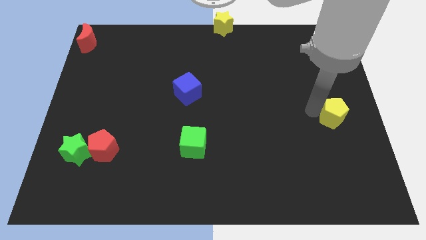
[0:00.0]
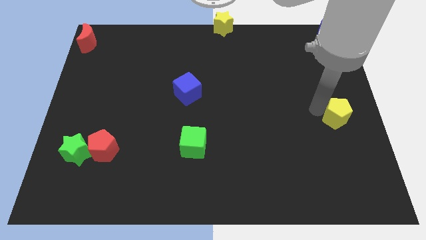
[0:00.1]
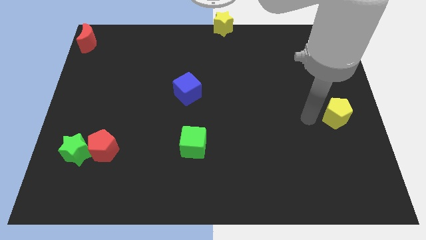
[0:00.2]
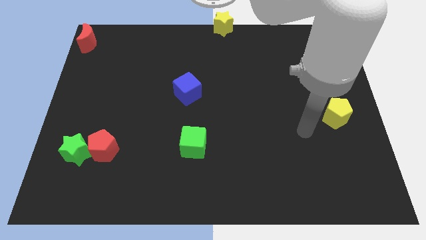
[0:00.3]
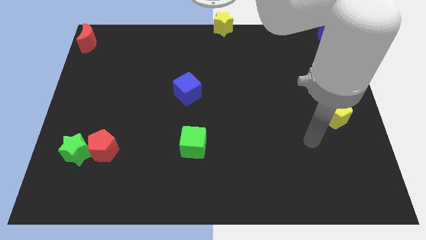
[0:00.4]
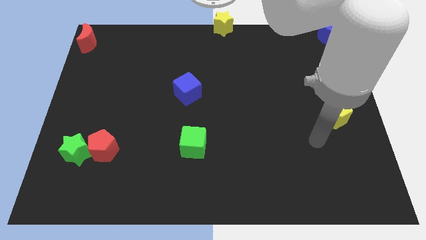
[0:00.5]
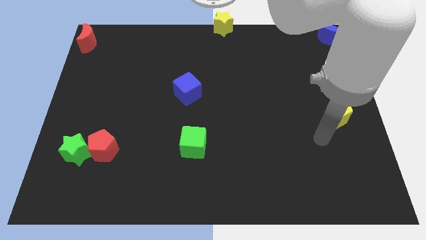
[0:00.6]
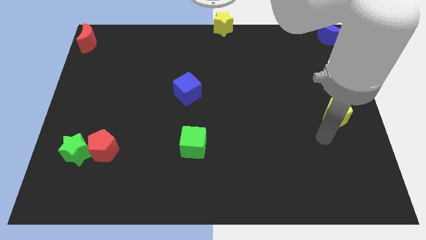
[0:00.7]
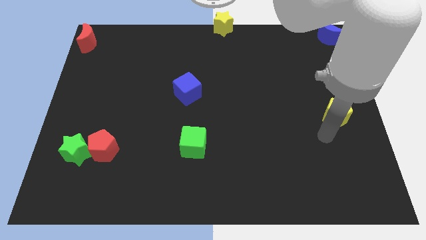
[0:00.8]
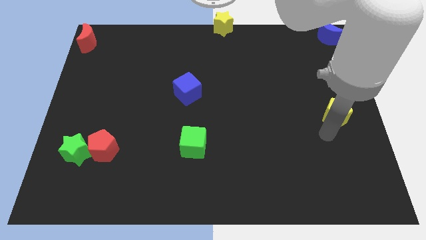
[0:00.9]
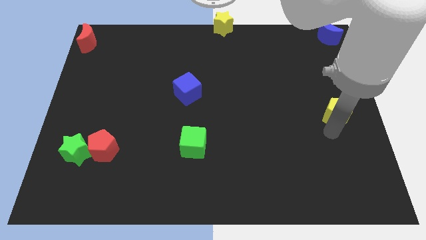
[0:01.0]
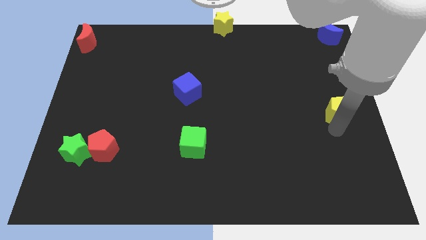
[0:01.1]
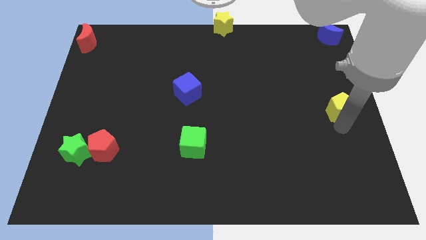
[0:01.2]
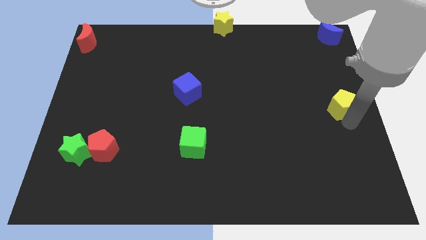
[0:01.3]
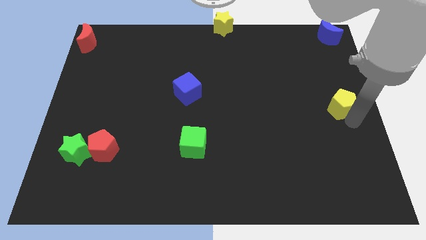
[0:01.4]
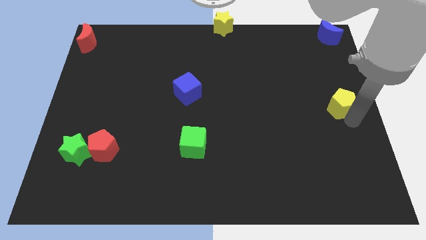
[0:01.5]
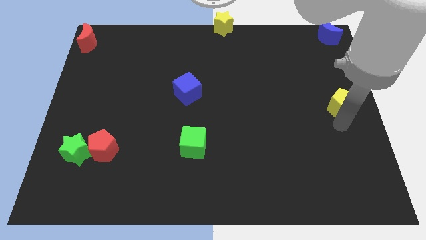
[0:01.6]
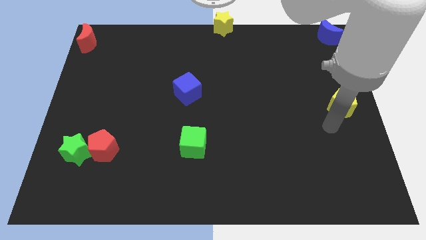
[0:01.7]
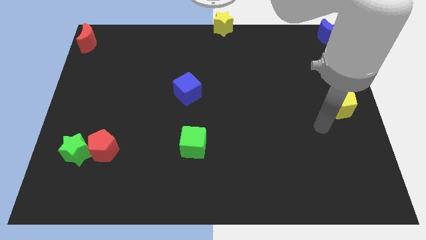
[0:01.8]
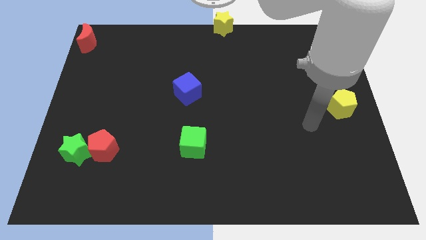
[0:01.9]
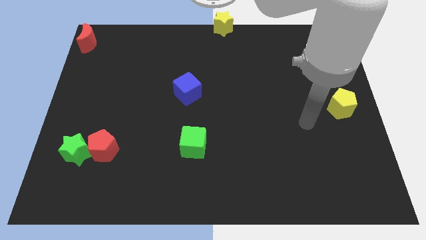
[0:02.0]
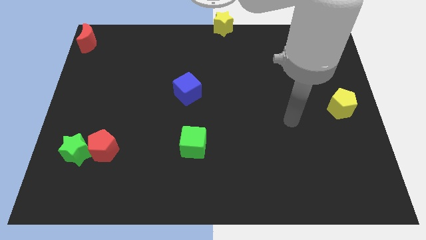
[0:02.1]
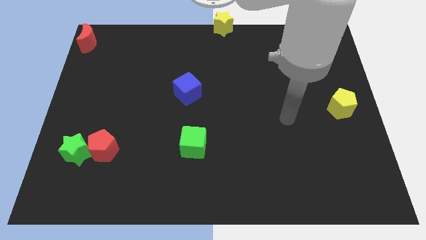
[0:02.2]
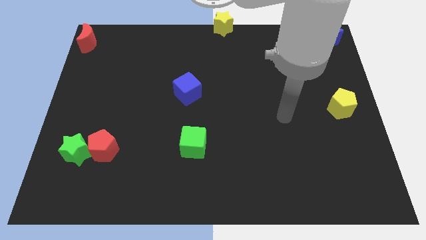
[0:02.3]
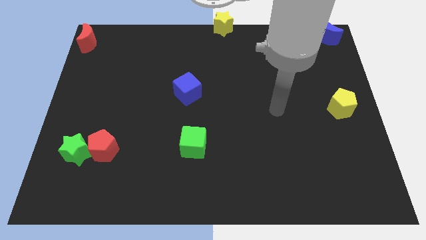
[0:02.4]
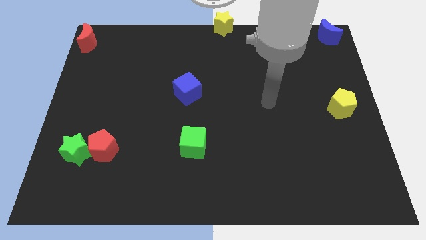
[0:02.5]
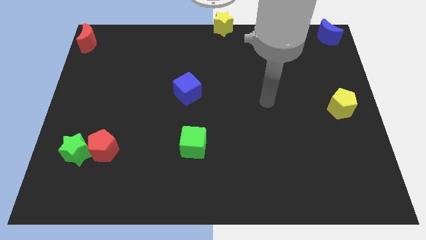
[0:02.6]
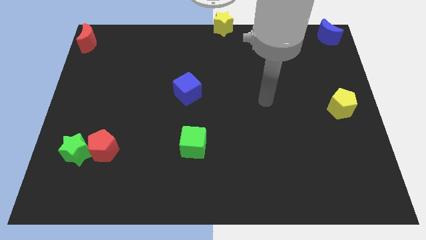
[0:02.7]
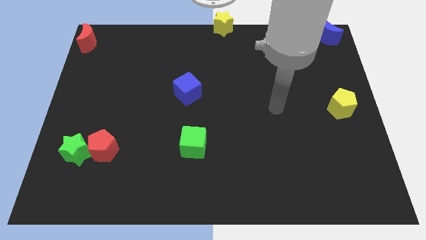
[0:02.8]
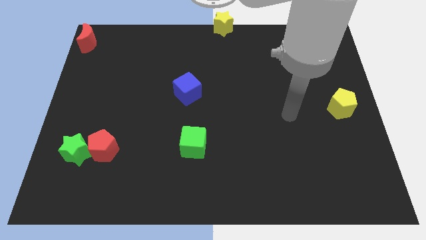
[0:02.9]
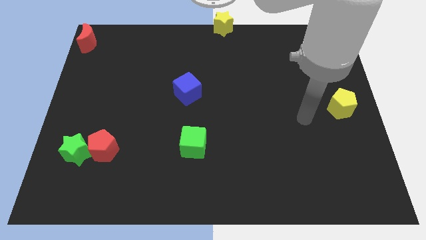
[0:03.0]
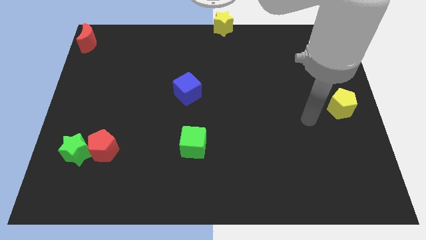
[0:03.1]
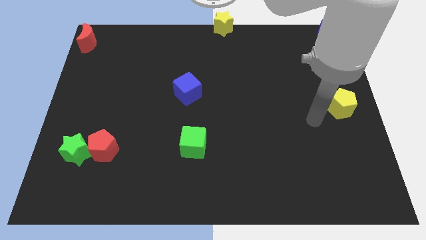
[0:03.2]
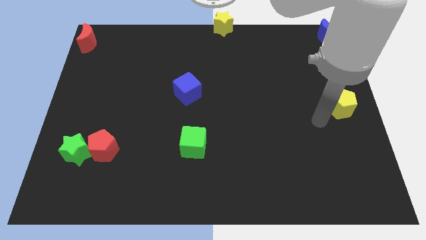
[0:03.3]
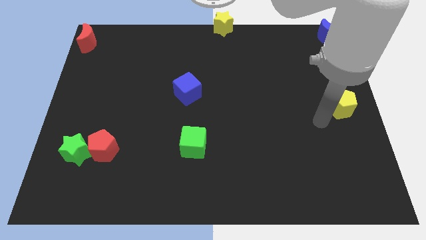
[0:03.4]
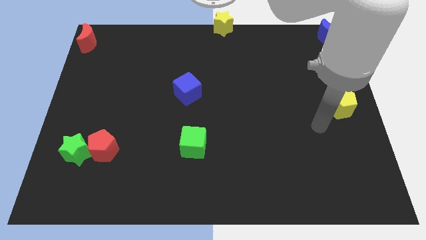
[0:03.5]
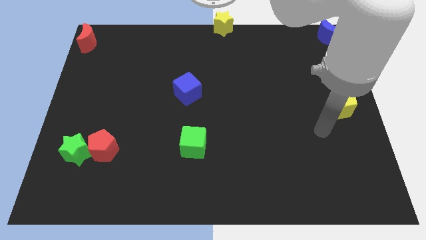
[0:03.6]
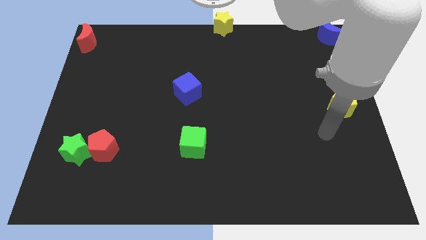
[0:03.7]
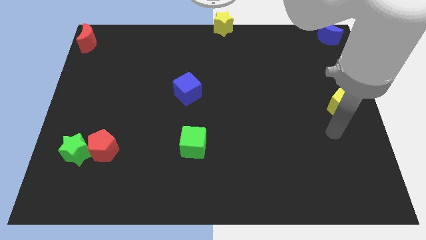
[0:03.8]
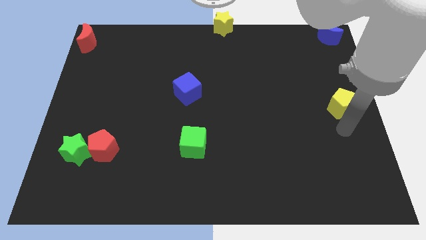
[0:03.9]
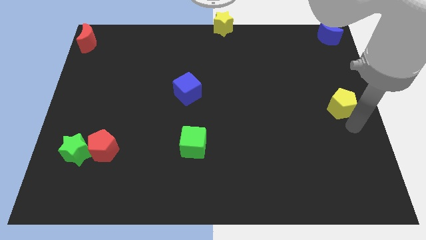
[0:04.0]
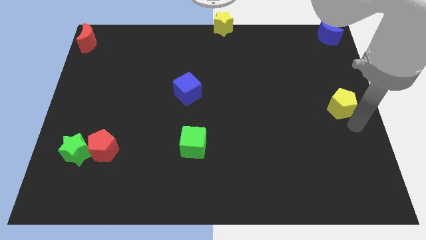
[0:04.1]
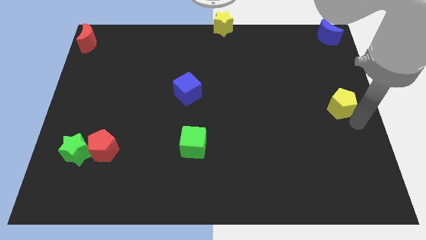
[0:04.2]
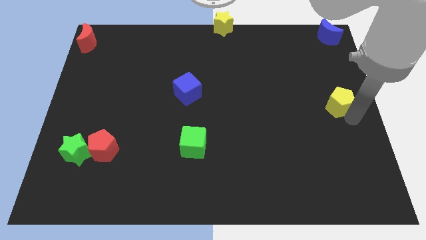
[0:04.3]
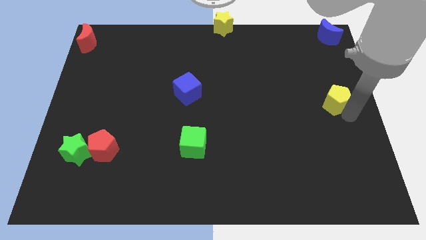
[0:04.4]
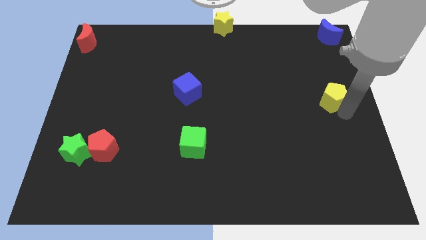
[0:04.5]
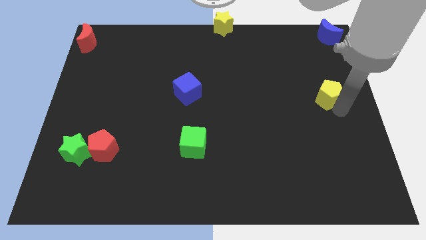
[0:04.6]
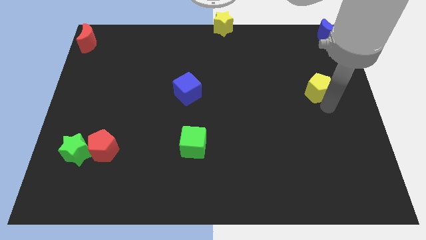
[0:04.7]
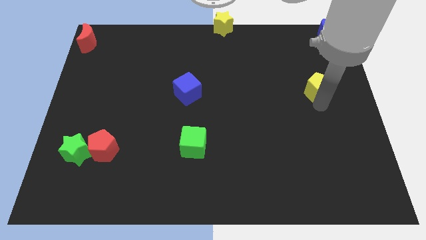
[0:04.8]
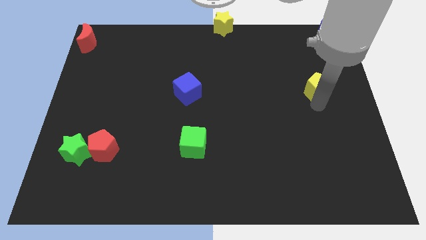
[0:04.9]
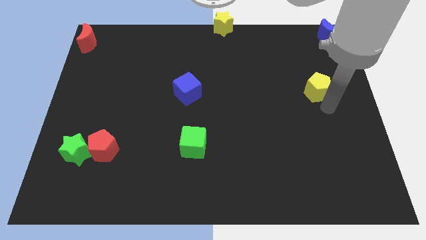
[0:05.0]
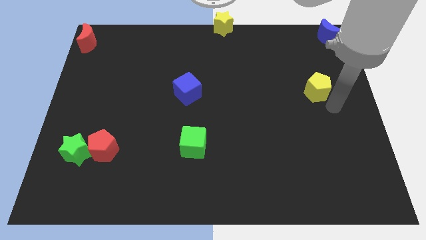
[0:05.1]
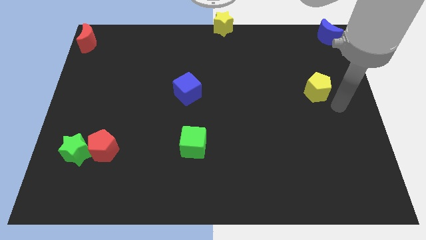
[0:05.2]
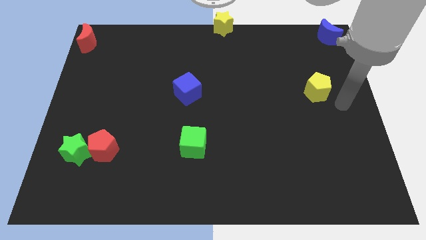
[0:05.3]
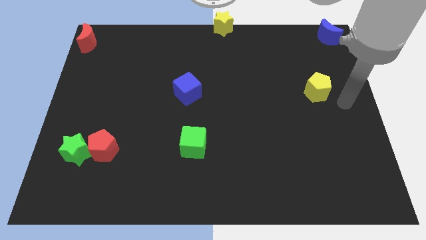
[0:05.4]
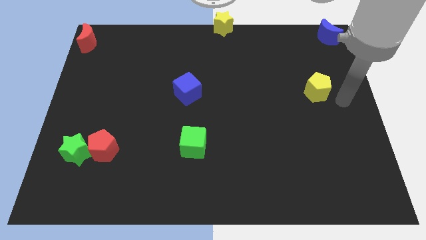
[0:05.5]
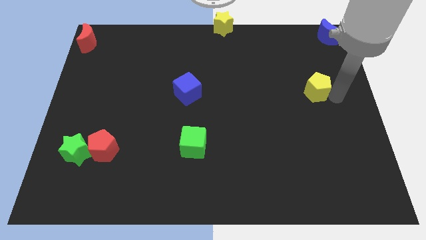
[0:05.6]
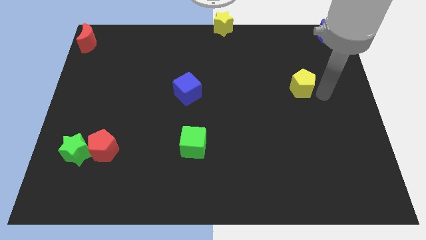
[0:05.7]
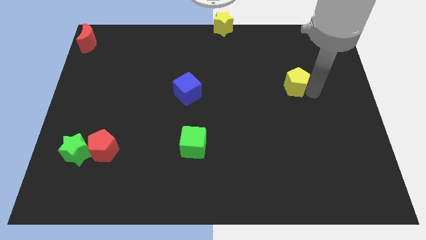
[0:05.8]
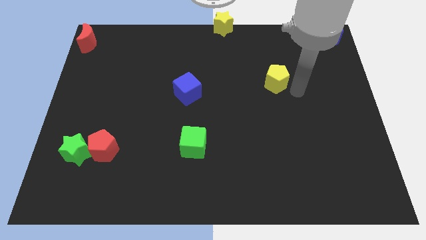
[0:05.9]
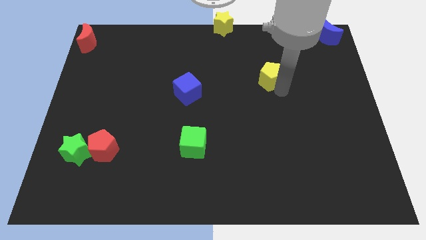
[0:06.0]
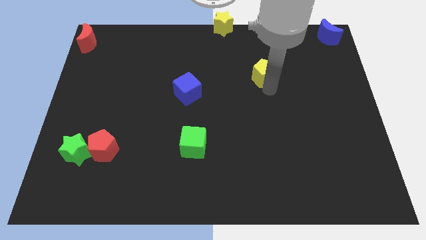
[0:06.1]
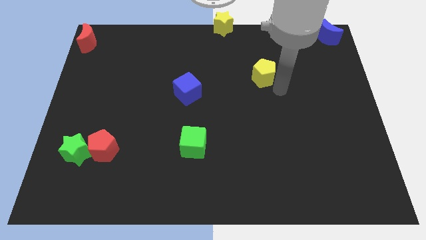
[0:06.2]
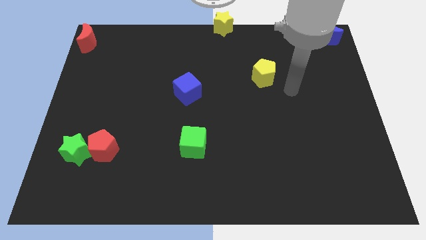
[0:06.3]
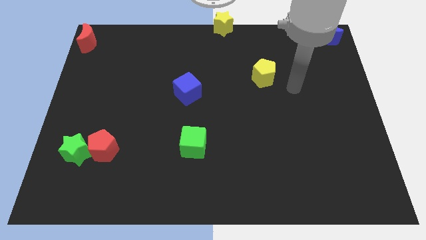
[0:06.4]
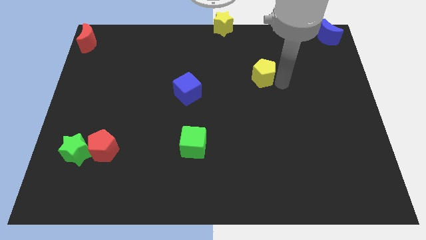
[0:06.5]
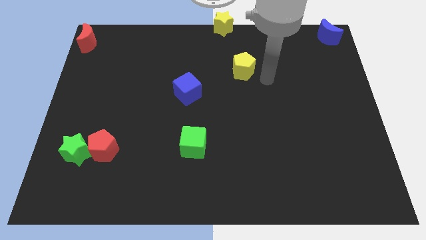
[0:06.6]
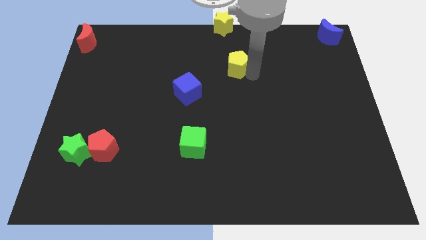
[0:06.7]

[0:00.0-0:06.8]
place the yellow pentagon in between the blue moon and blue cube

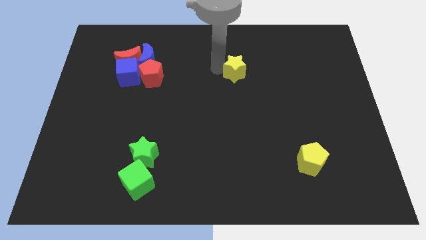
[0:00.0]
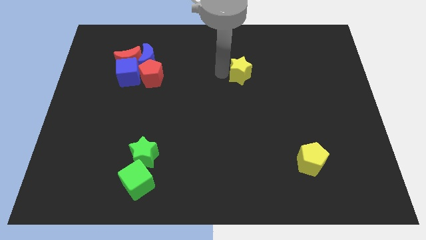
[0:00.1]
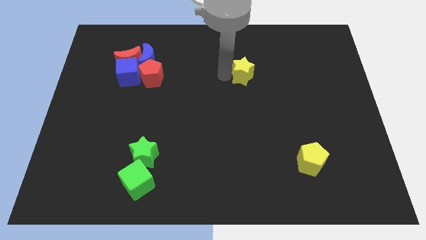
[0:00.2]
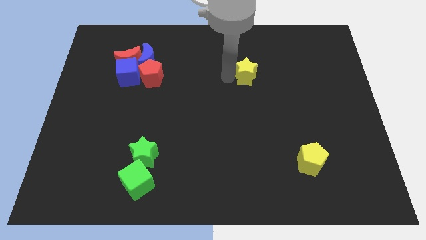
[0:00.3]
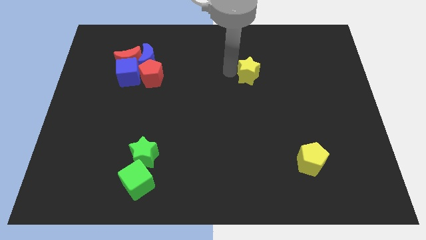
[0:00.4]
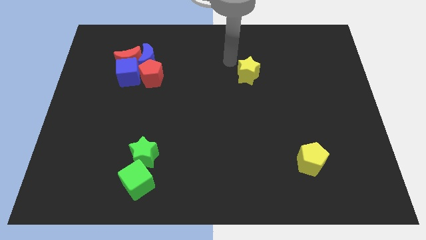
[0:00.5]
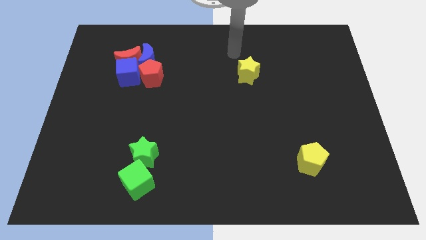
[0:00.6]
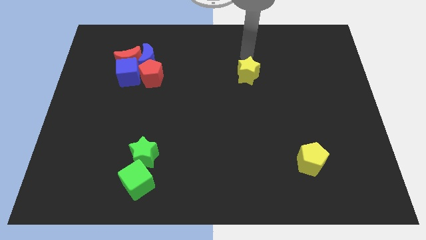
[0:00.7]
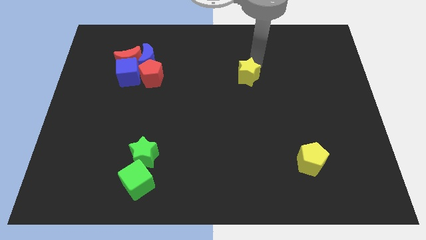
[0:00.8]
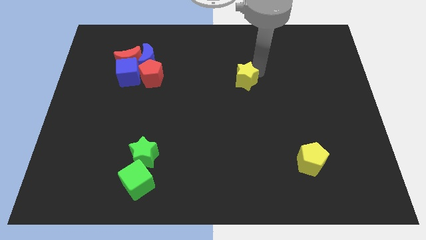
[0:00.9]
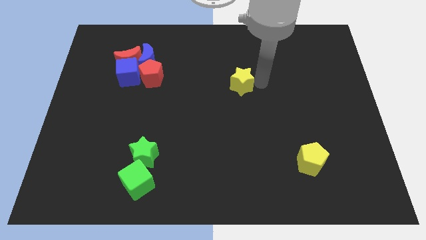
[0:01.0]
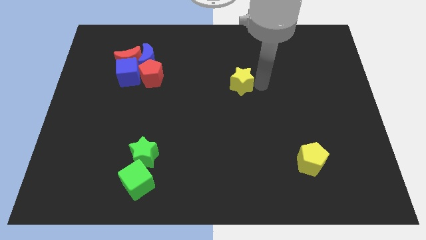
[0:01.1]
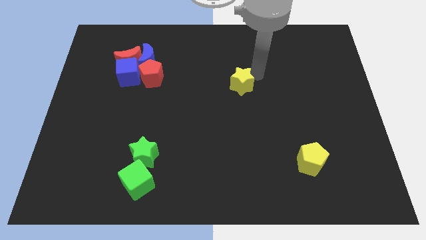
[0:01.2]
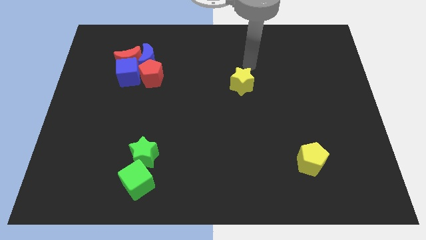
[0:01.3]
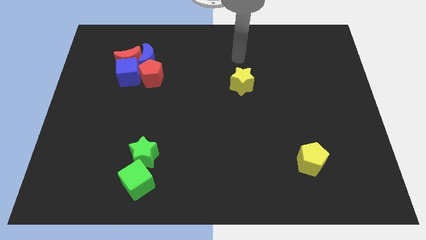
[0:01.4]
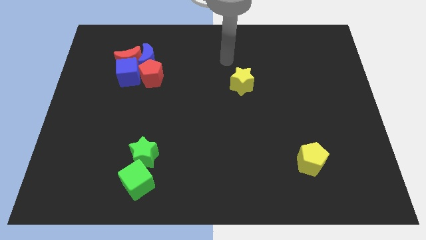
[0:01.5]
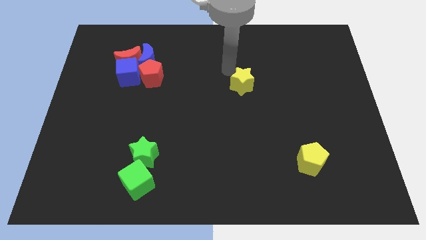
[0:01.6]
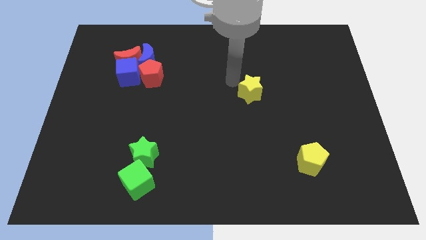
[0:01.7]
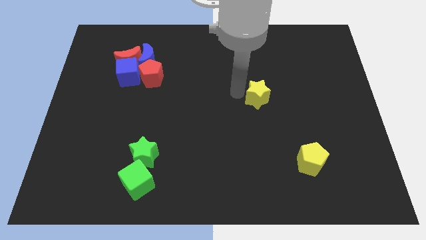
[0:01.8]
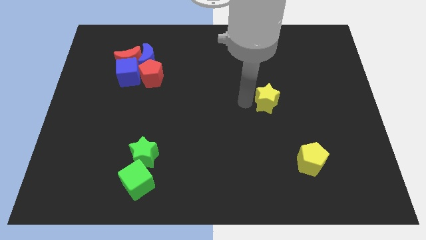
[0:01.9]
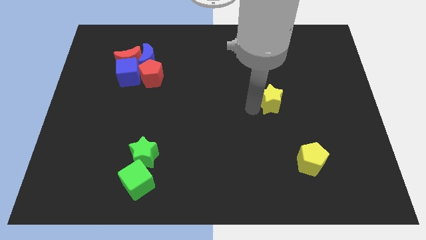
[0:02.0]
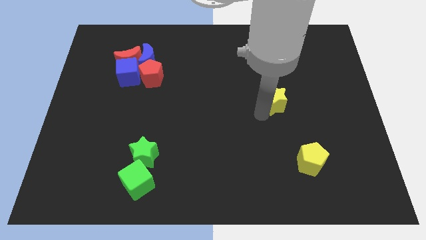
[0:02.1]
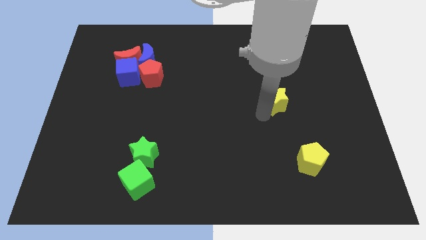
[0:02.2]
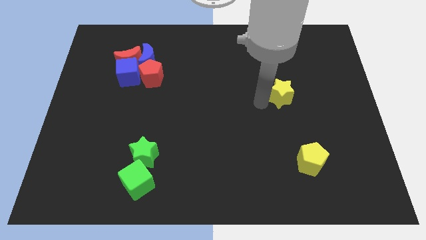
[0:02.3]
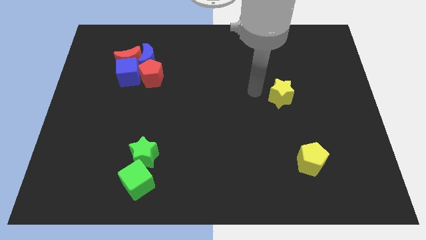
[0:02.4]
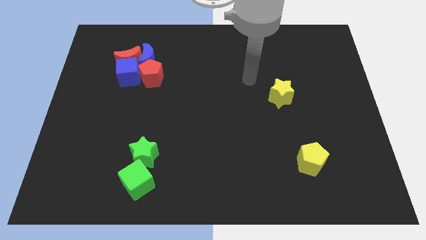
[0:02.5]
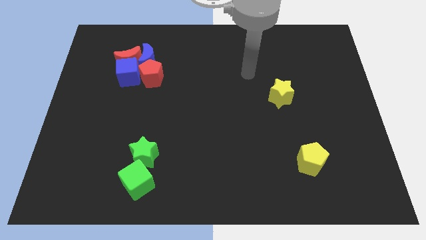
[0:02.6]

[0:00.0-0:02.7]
push the yellow star closer to the yellow pentagon
